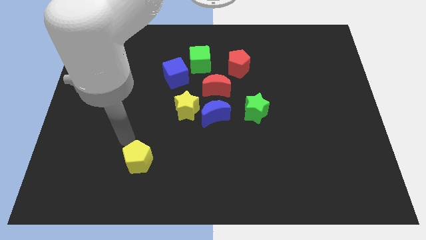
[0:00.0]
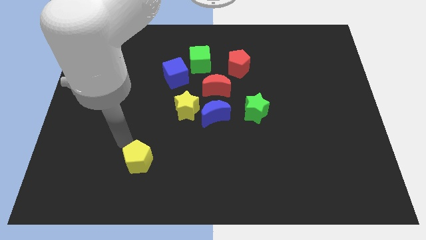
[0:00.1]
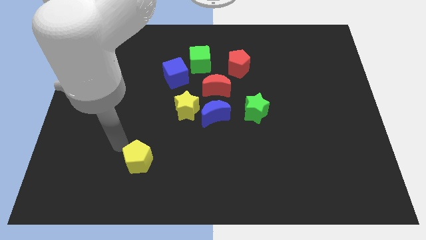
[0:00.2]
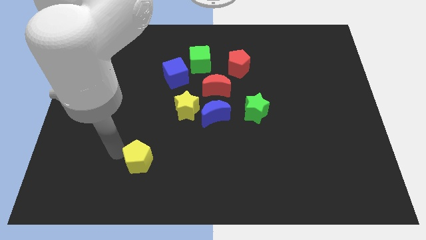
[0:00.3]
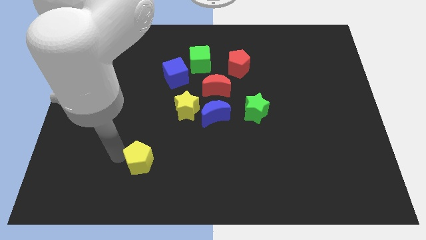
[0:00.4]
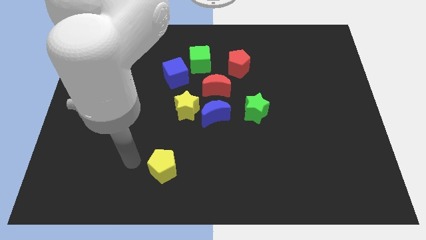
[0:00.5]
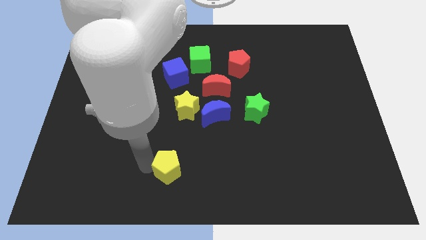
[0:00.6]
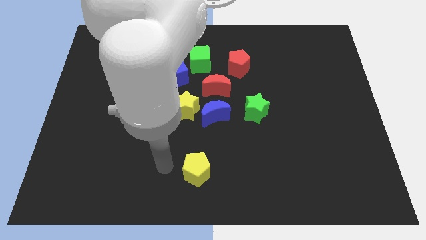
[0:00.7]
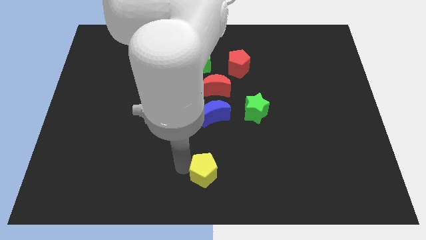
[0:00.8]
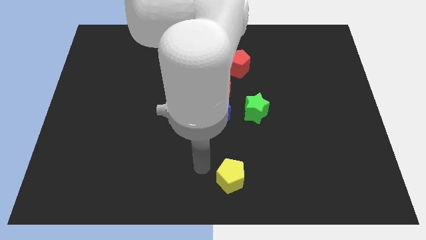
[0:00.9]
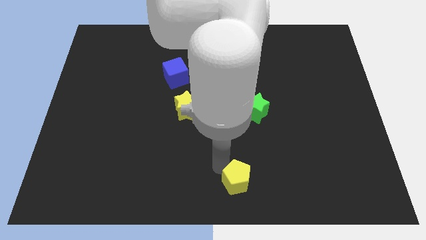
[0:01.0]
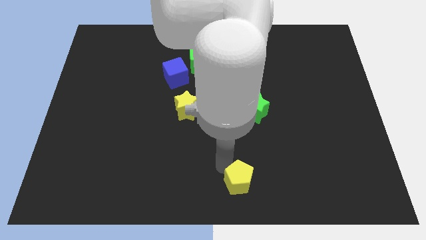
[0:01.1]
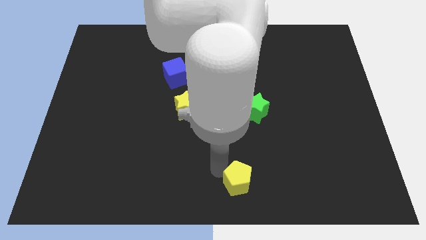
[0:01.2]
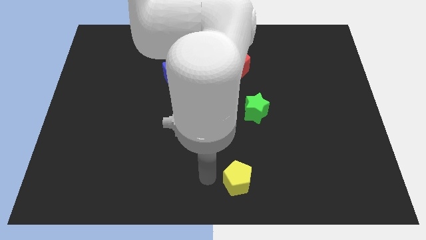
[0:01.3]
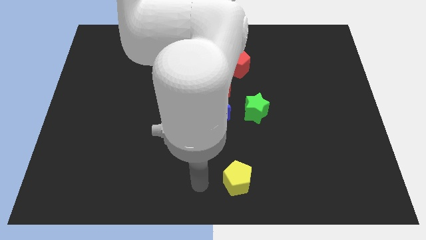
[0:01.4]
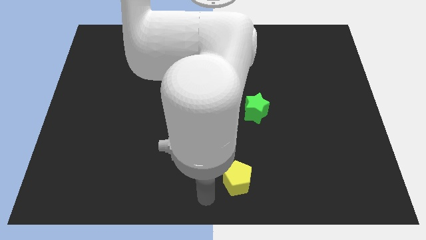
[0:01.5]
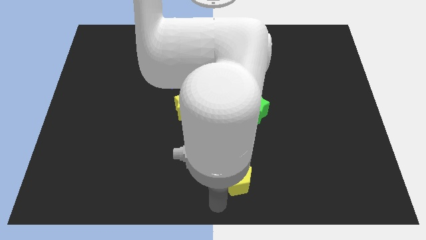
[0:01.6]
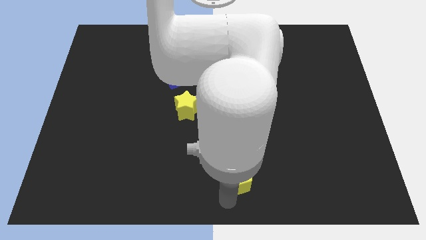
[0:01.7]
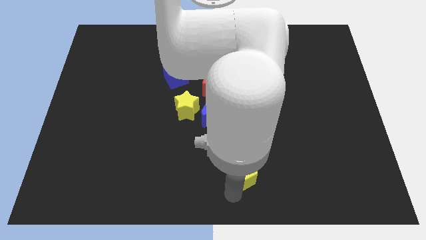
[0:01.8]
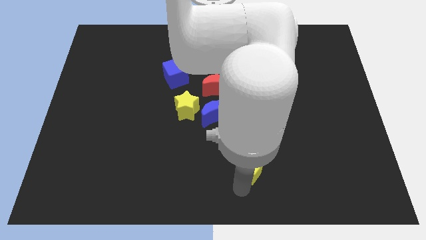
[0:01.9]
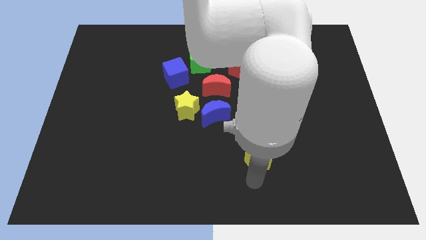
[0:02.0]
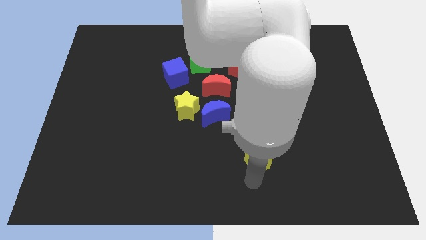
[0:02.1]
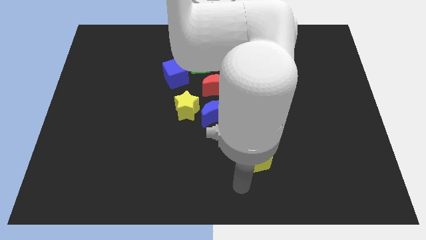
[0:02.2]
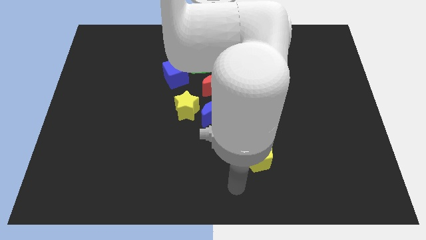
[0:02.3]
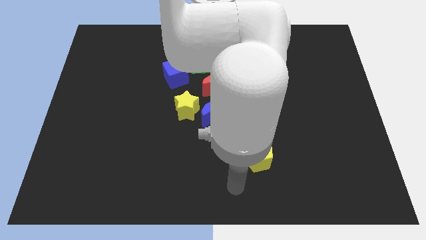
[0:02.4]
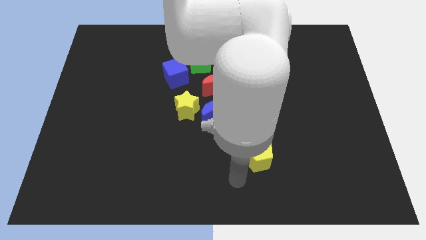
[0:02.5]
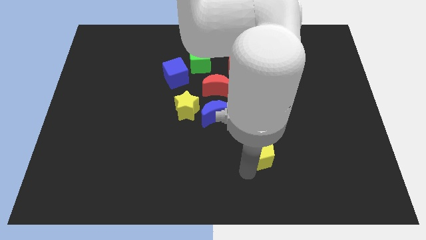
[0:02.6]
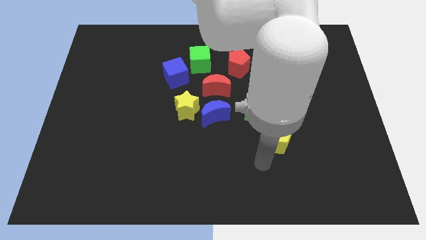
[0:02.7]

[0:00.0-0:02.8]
push the yellow pentagon towards the green star

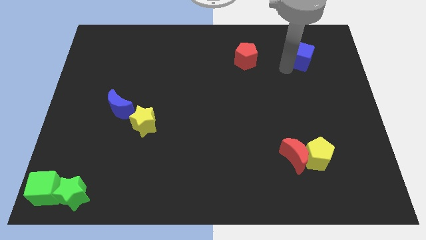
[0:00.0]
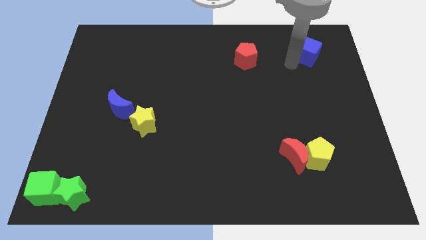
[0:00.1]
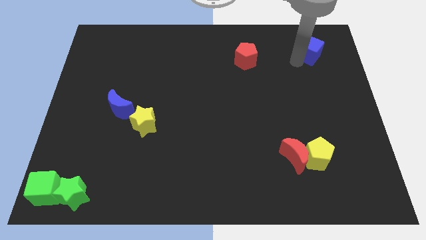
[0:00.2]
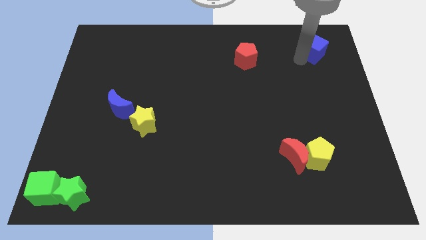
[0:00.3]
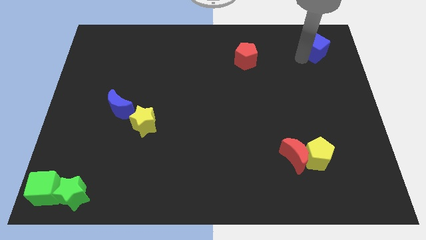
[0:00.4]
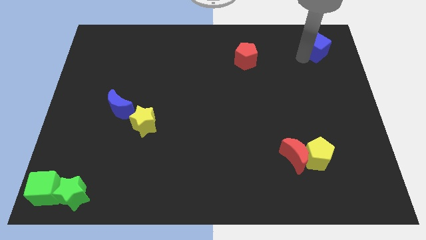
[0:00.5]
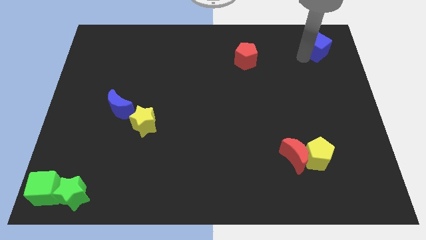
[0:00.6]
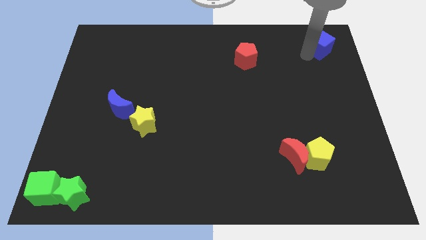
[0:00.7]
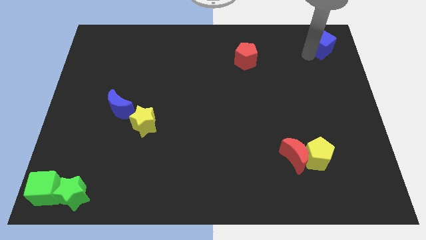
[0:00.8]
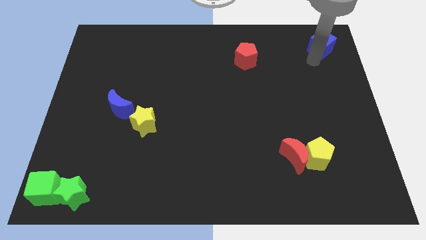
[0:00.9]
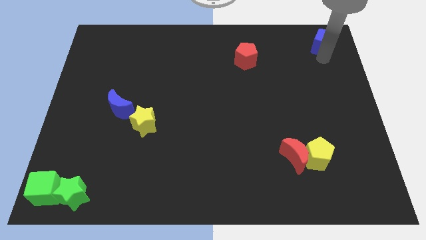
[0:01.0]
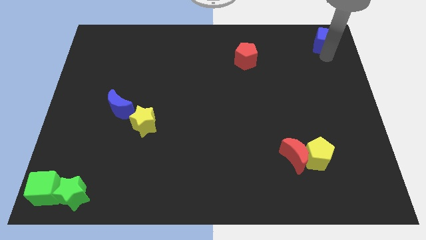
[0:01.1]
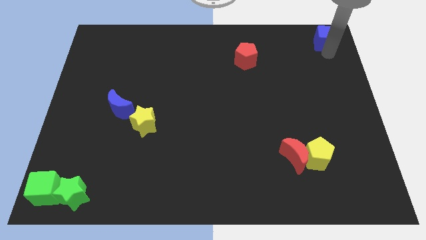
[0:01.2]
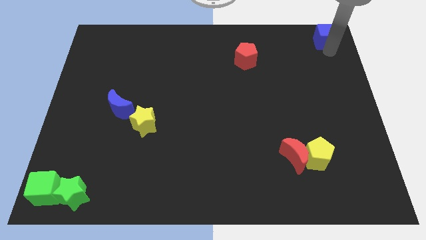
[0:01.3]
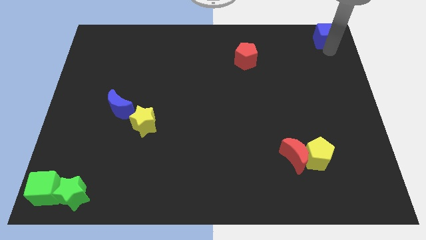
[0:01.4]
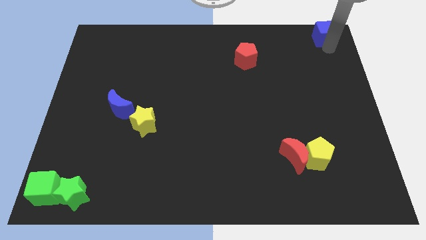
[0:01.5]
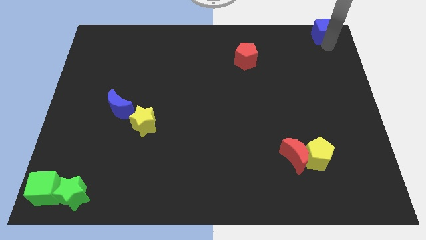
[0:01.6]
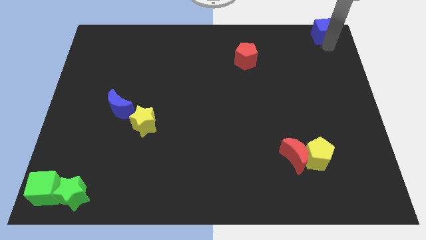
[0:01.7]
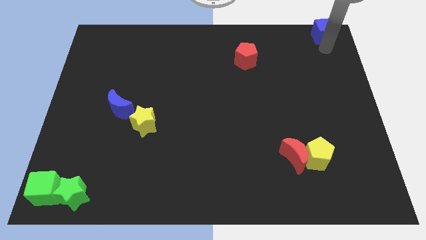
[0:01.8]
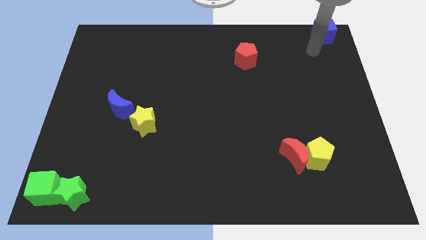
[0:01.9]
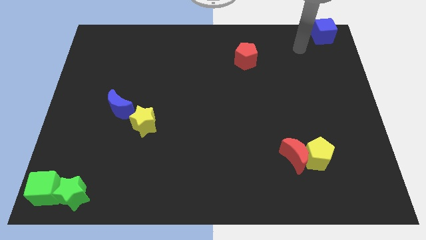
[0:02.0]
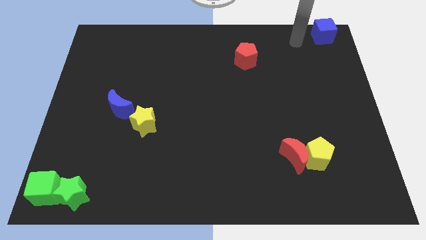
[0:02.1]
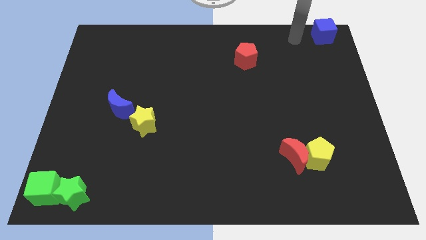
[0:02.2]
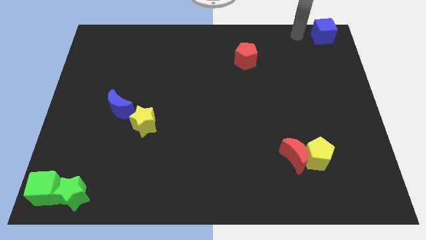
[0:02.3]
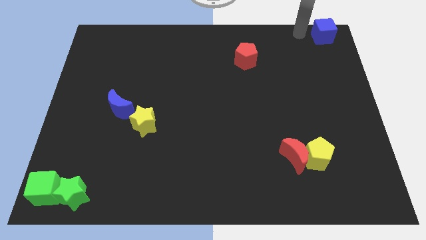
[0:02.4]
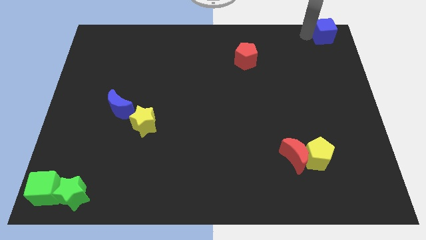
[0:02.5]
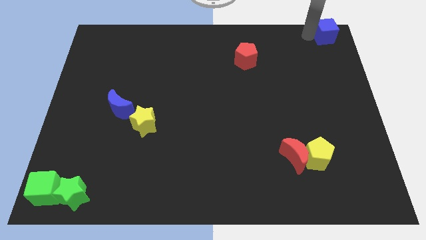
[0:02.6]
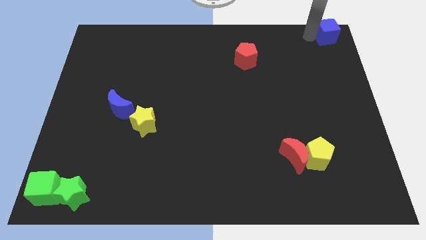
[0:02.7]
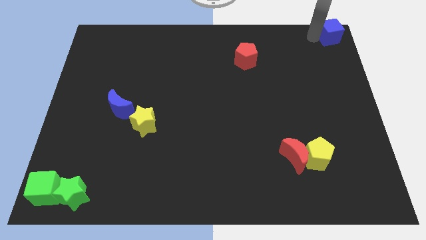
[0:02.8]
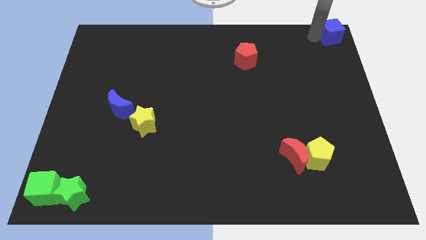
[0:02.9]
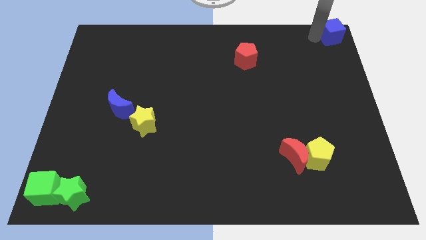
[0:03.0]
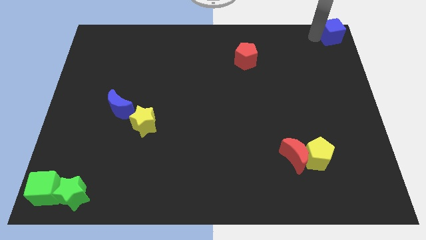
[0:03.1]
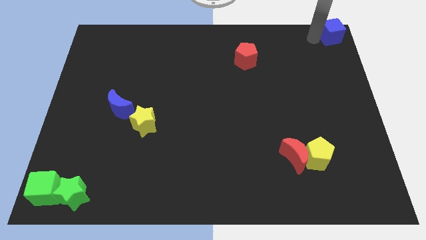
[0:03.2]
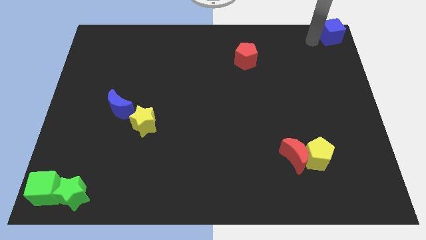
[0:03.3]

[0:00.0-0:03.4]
place the blue cube at the top right corner

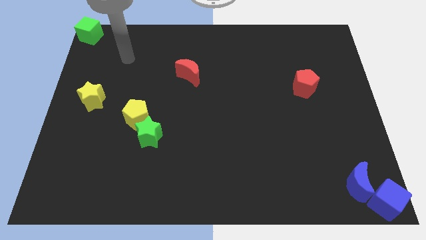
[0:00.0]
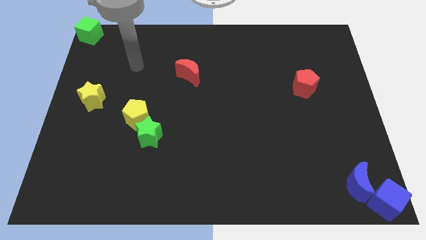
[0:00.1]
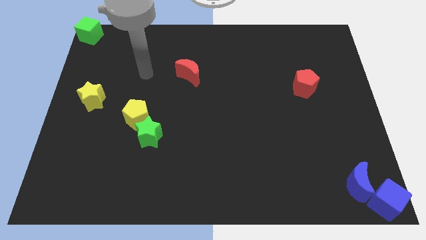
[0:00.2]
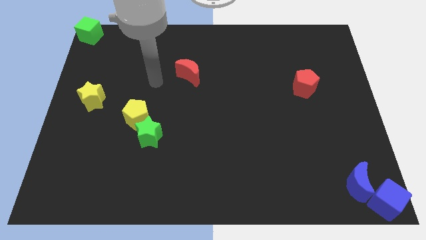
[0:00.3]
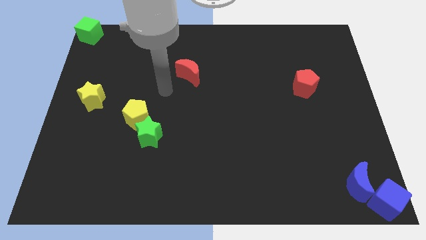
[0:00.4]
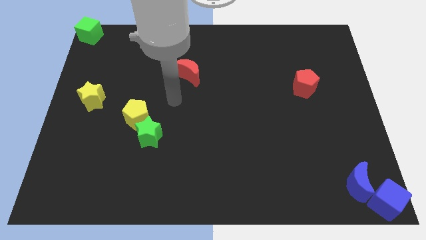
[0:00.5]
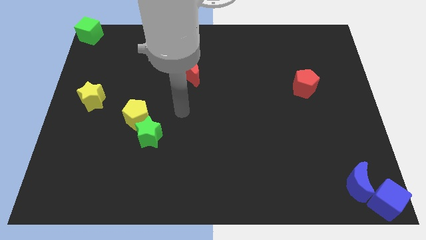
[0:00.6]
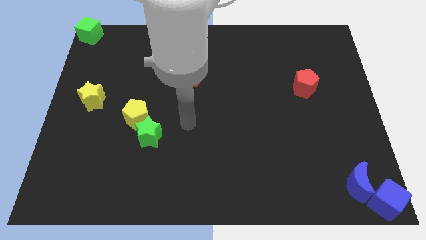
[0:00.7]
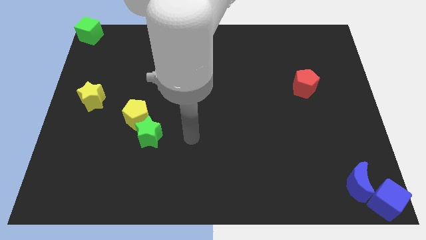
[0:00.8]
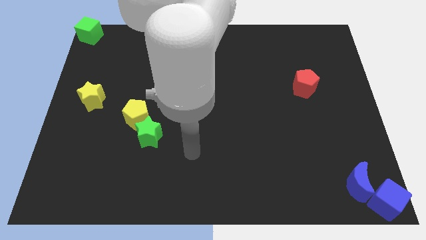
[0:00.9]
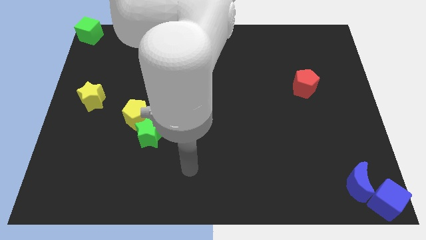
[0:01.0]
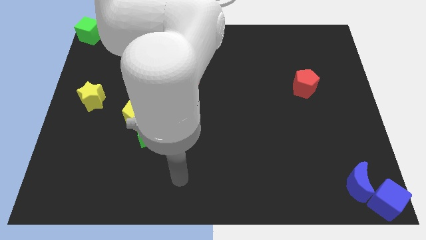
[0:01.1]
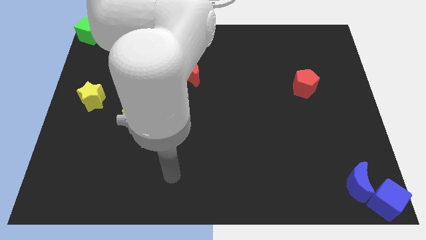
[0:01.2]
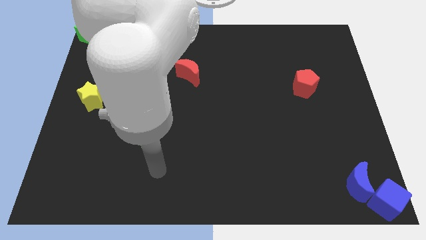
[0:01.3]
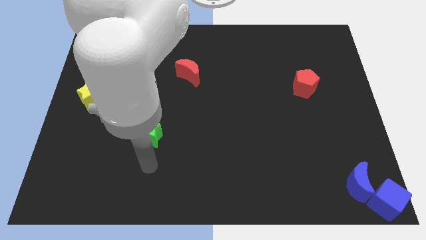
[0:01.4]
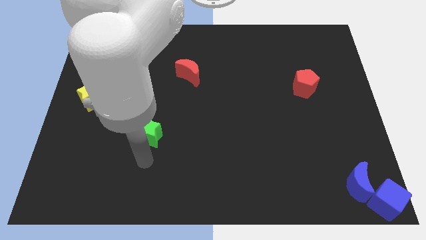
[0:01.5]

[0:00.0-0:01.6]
place the arm below the green star

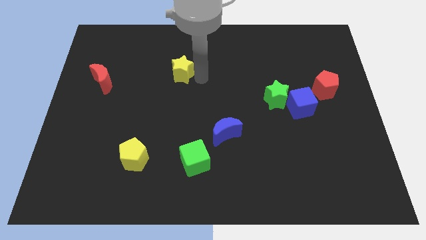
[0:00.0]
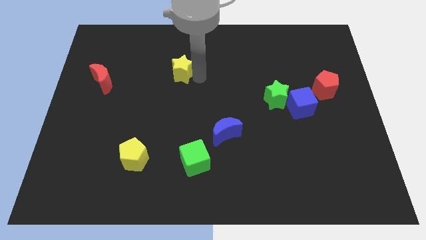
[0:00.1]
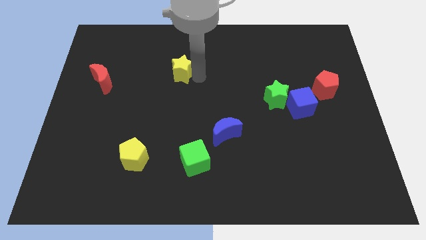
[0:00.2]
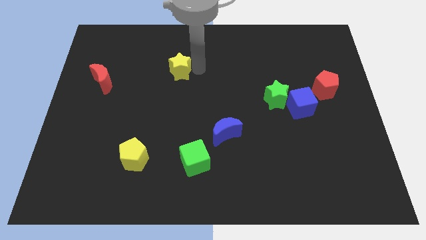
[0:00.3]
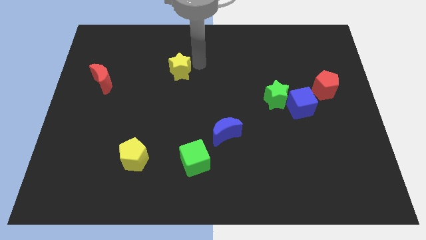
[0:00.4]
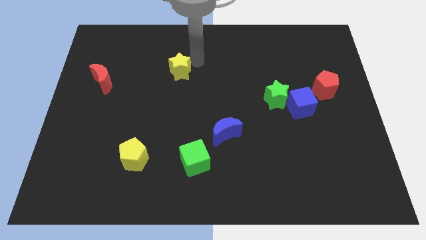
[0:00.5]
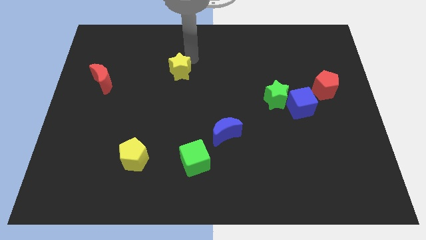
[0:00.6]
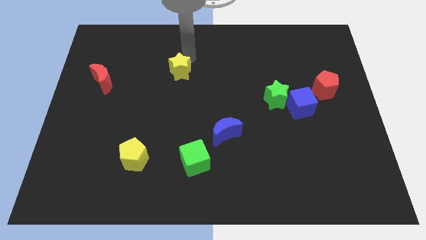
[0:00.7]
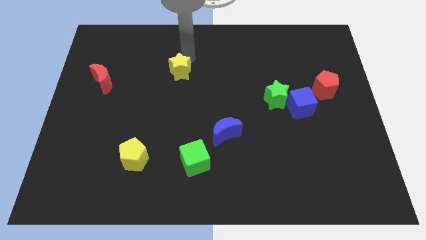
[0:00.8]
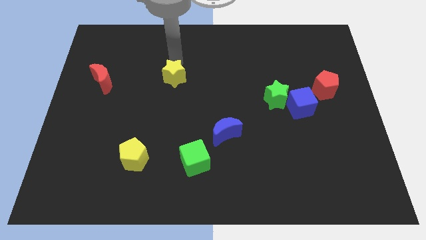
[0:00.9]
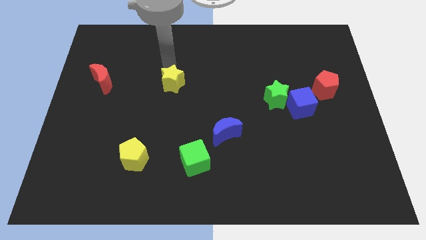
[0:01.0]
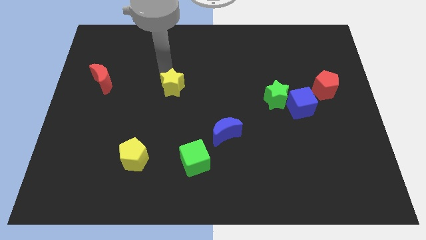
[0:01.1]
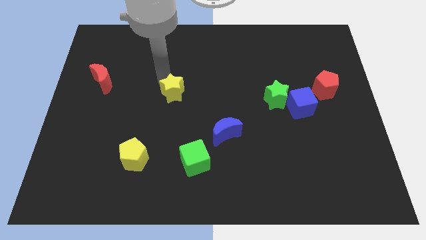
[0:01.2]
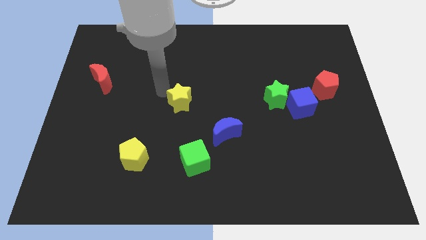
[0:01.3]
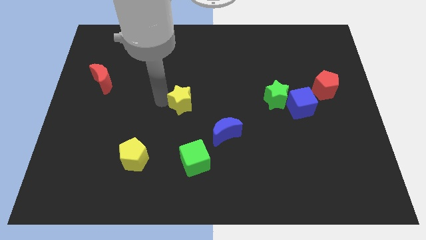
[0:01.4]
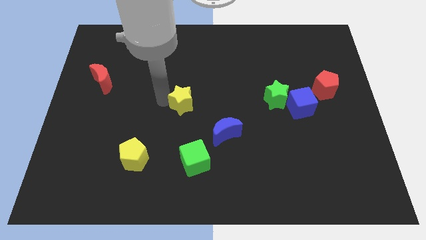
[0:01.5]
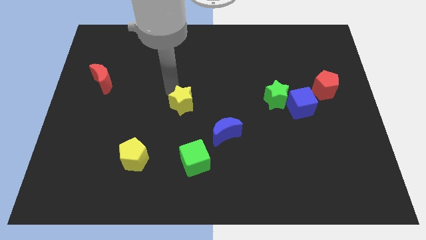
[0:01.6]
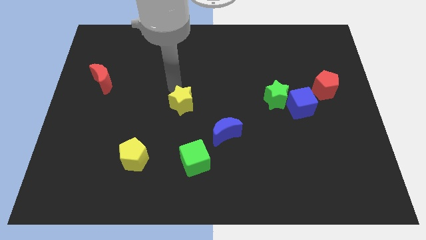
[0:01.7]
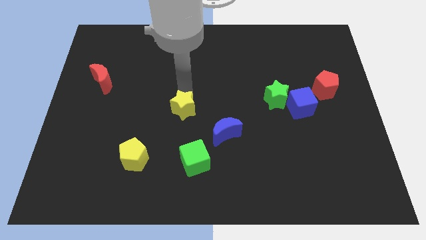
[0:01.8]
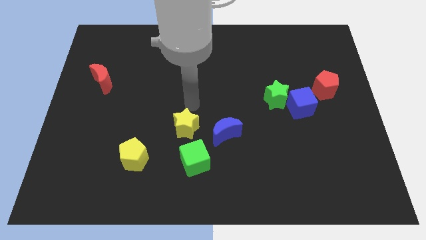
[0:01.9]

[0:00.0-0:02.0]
drag the yellow star towards the green cube
